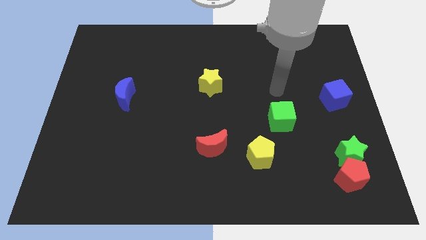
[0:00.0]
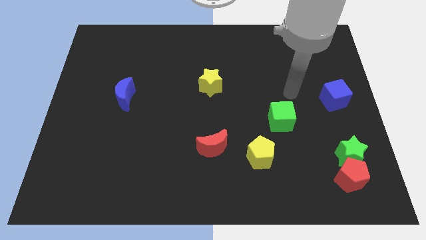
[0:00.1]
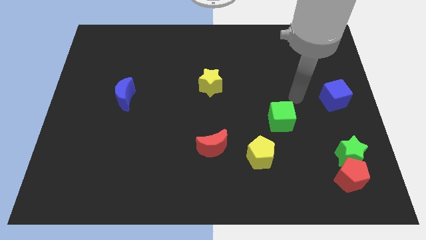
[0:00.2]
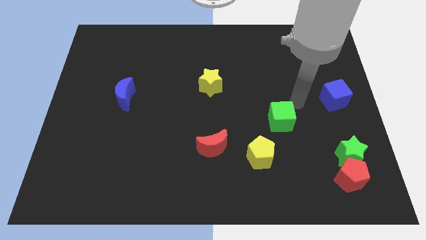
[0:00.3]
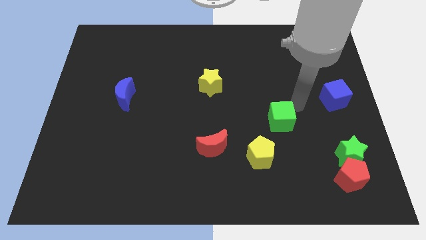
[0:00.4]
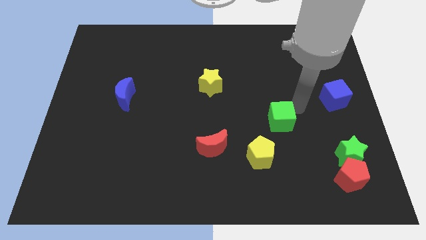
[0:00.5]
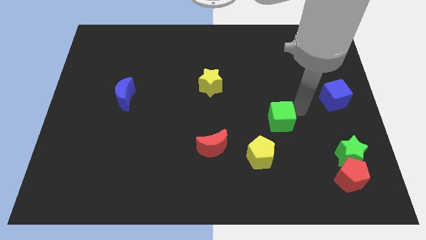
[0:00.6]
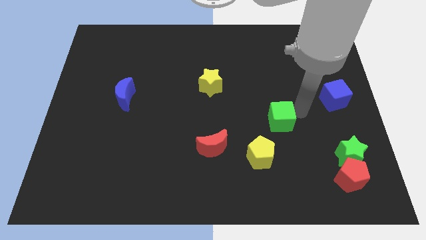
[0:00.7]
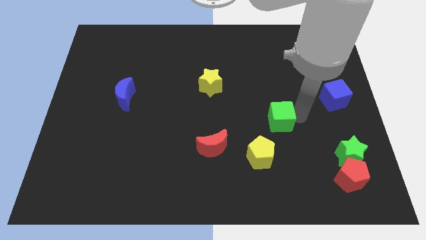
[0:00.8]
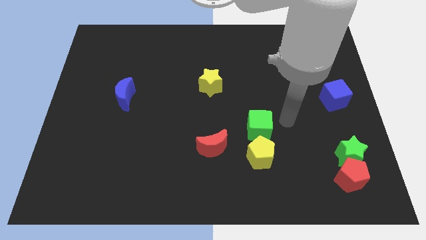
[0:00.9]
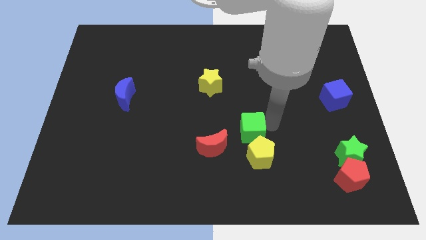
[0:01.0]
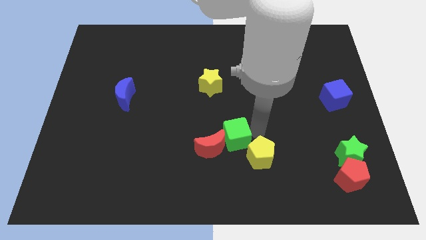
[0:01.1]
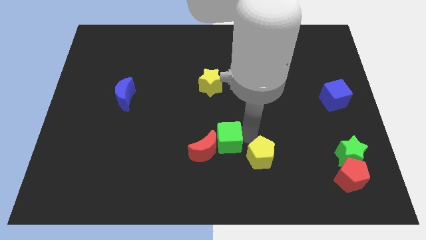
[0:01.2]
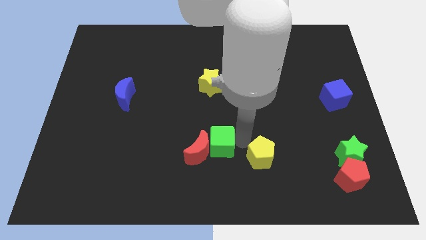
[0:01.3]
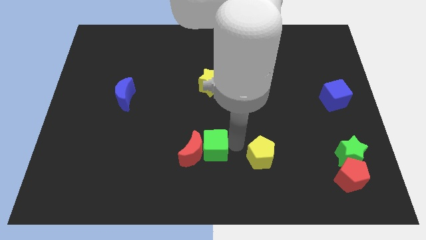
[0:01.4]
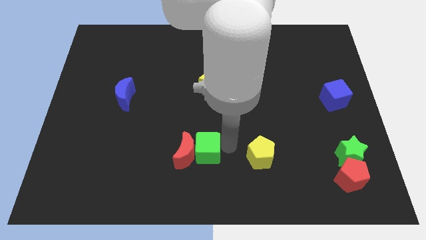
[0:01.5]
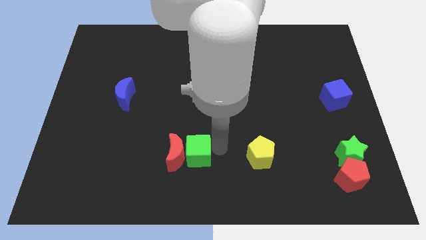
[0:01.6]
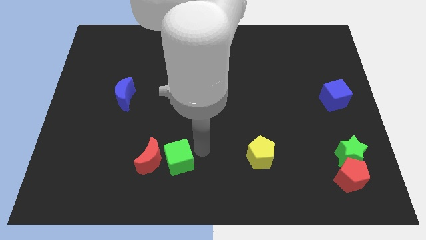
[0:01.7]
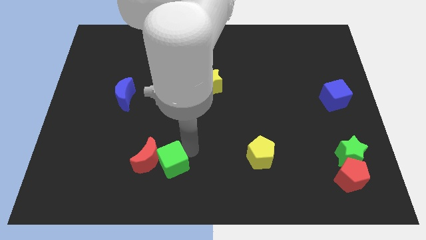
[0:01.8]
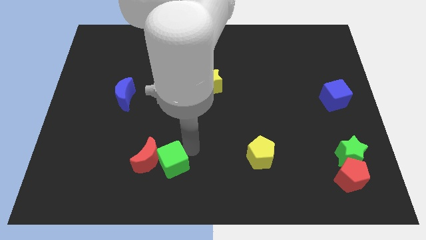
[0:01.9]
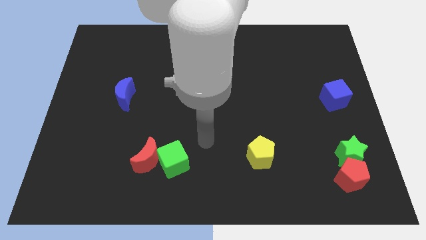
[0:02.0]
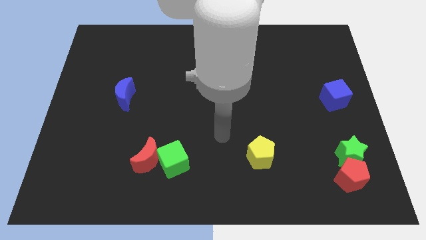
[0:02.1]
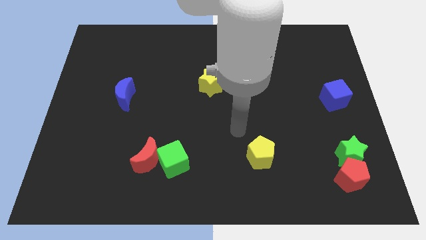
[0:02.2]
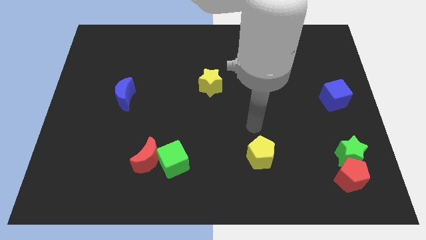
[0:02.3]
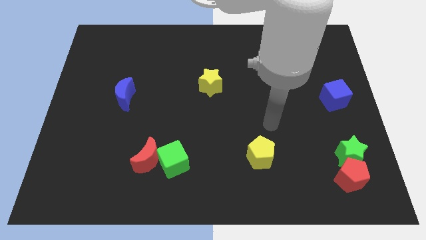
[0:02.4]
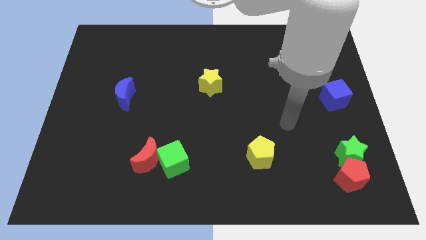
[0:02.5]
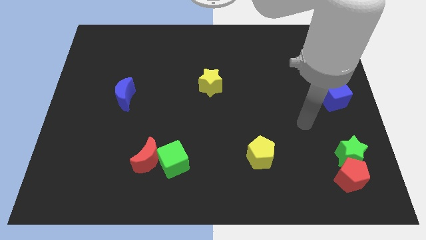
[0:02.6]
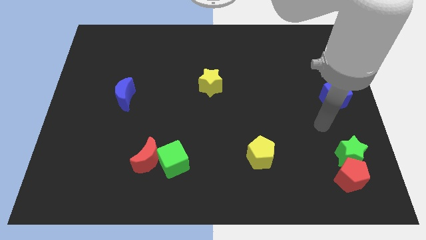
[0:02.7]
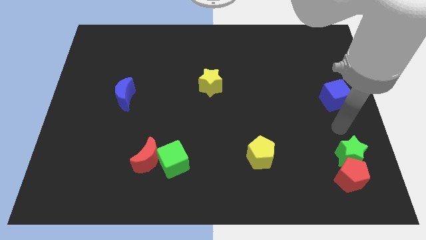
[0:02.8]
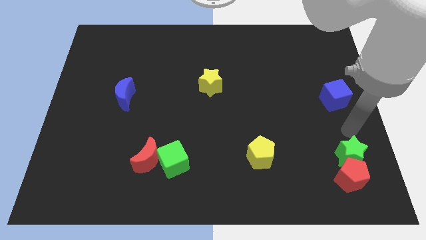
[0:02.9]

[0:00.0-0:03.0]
put the green cube and red moon together to the left side of the yellow pentagon

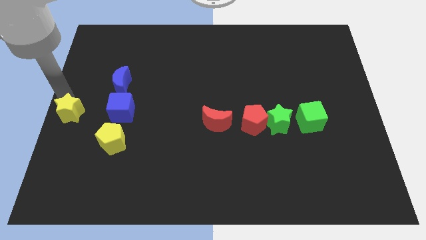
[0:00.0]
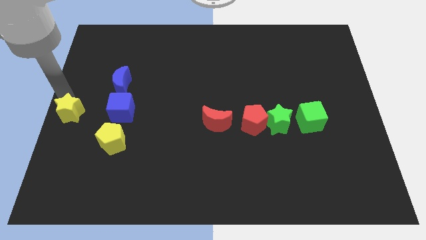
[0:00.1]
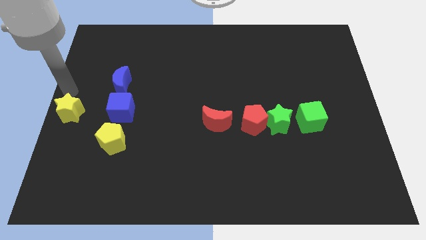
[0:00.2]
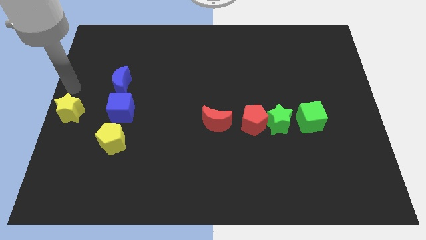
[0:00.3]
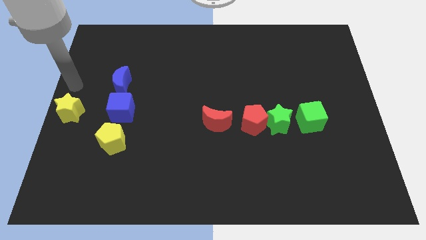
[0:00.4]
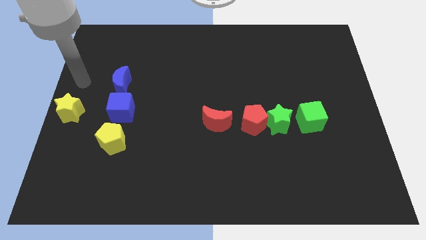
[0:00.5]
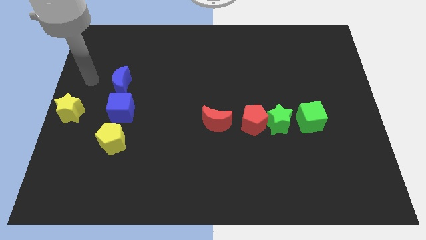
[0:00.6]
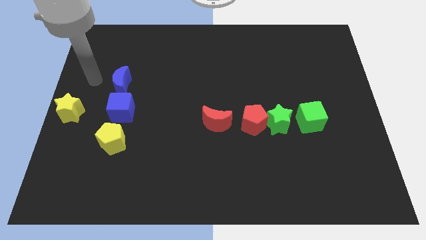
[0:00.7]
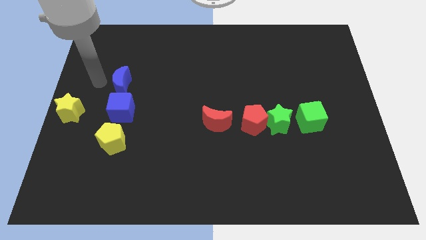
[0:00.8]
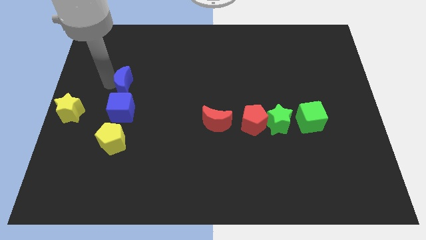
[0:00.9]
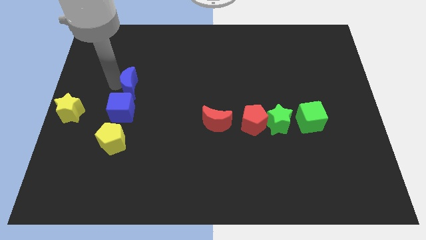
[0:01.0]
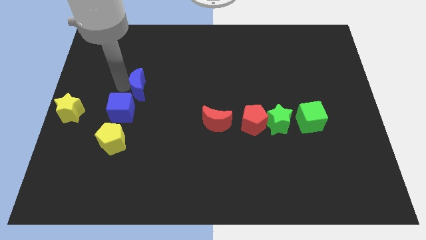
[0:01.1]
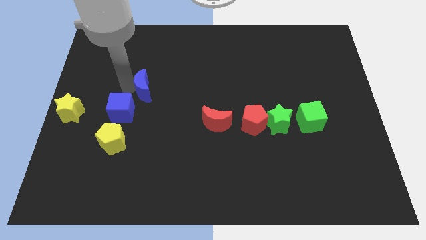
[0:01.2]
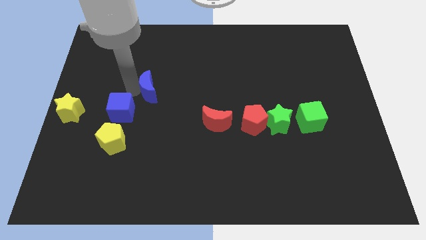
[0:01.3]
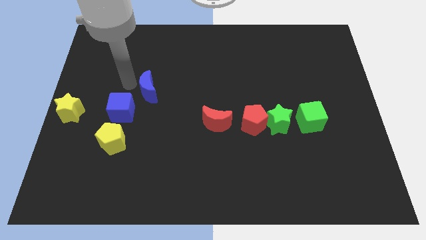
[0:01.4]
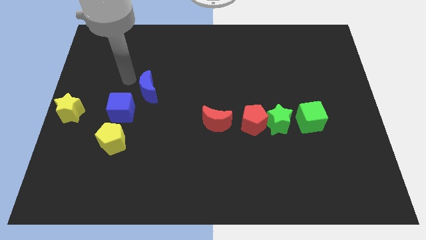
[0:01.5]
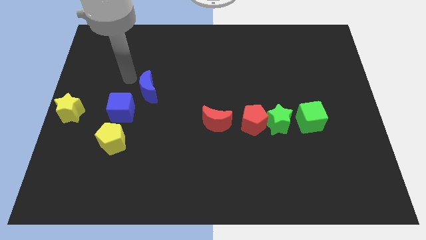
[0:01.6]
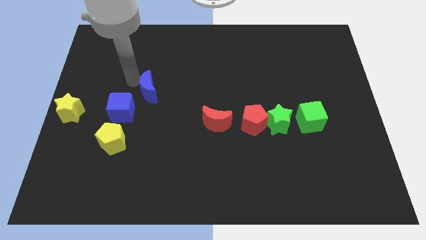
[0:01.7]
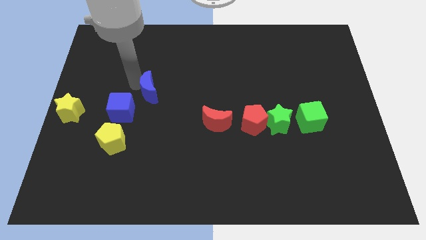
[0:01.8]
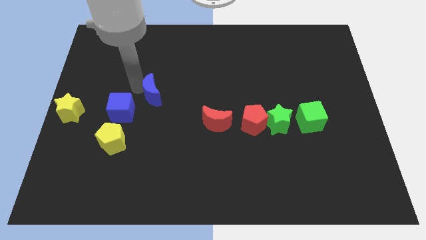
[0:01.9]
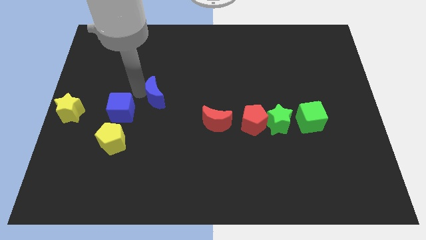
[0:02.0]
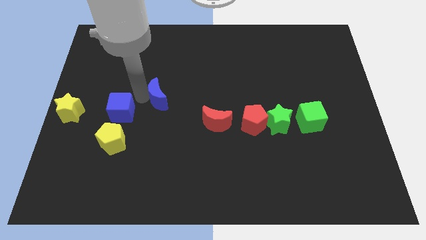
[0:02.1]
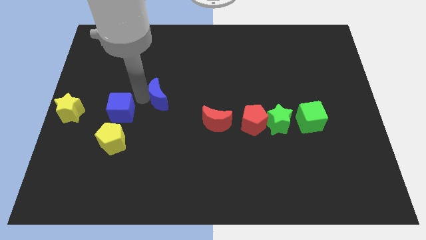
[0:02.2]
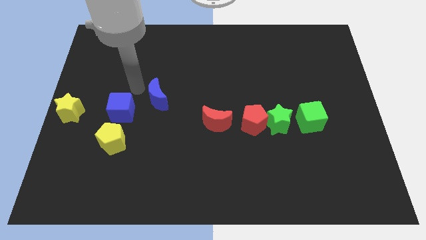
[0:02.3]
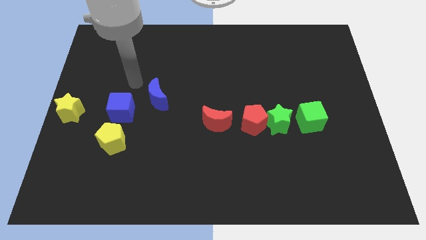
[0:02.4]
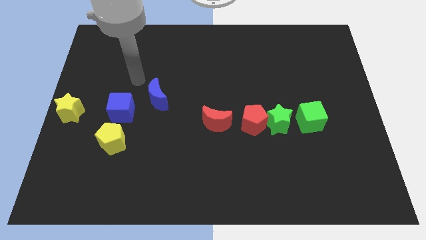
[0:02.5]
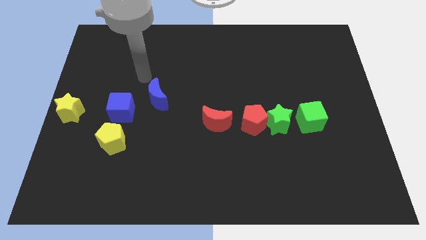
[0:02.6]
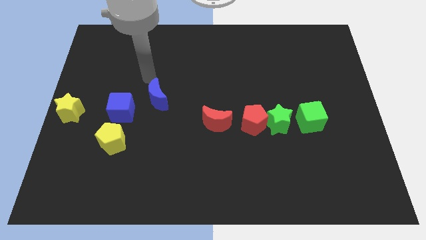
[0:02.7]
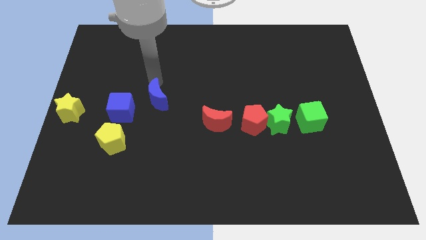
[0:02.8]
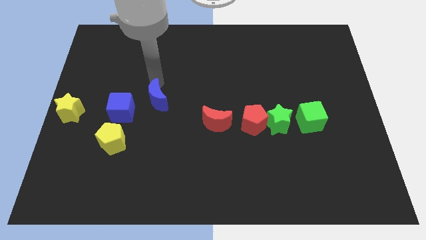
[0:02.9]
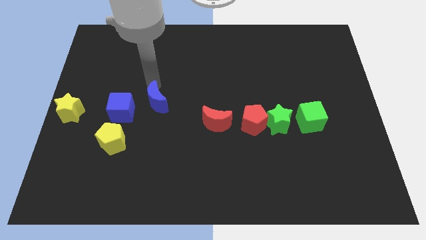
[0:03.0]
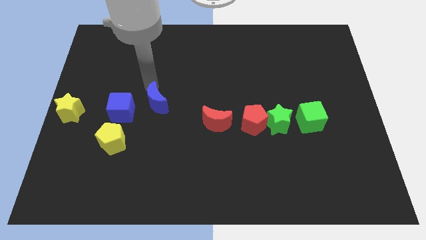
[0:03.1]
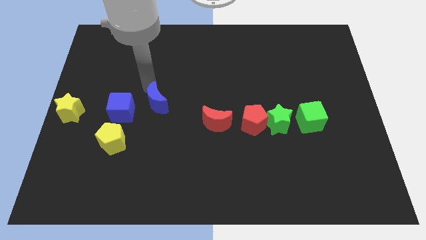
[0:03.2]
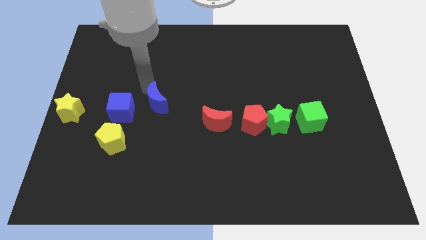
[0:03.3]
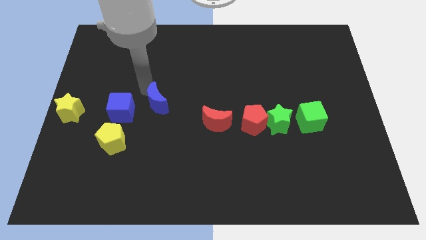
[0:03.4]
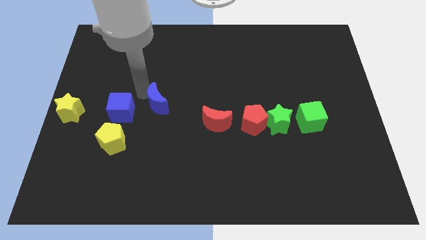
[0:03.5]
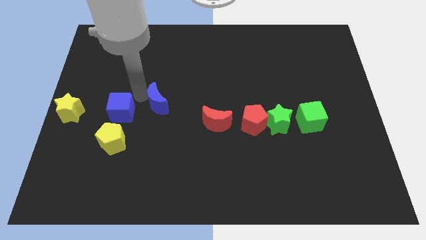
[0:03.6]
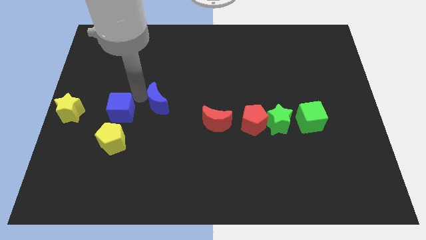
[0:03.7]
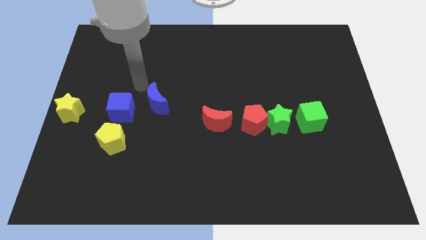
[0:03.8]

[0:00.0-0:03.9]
place blue moon to the top right of blue cube

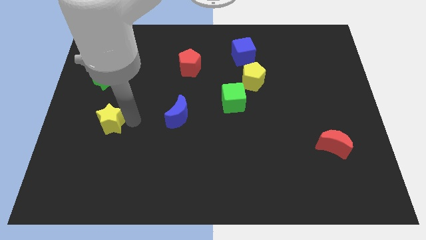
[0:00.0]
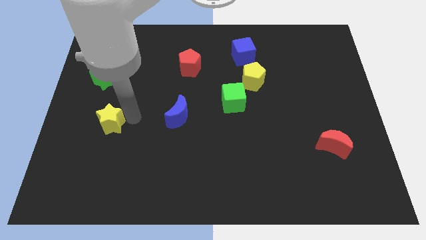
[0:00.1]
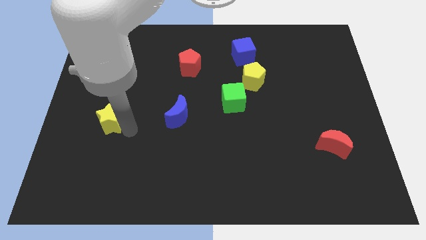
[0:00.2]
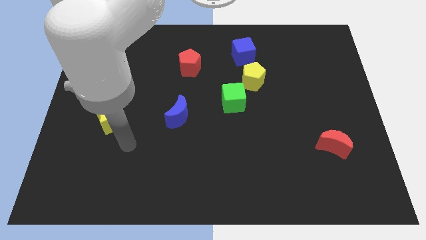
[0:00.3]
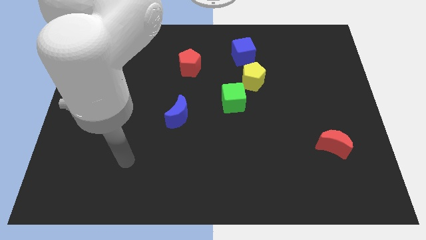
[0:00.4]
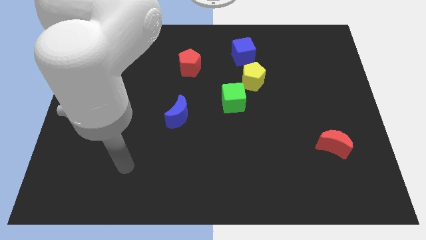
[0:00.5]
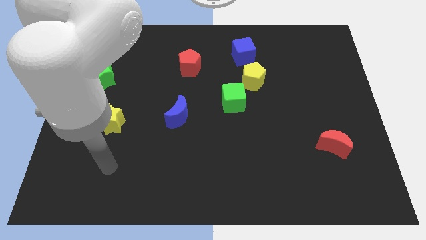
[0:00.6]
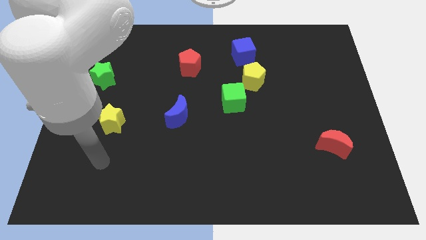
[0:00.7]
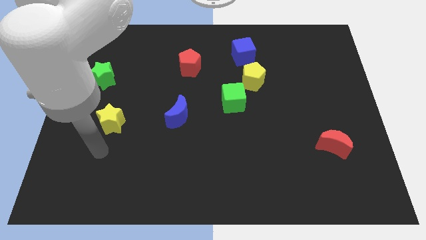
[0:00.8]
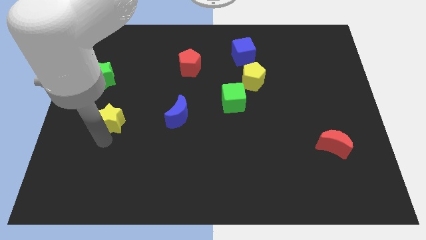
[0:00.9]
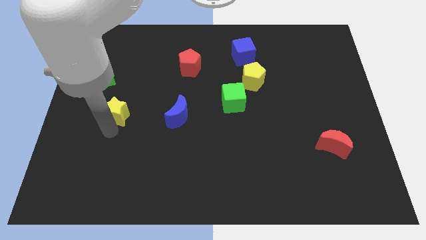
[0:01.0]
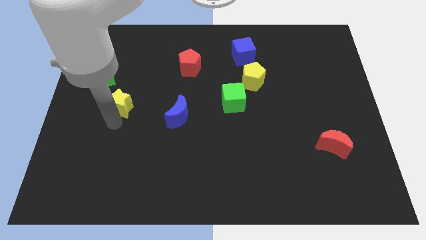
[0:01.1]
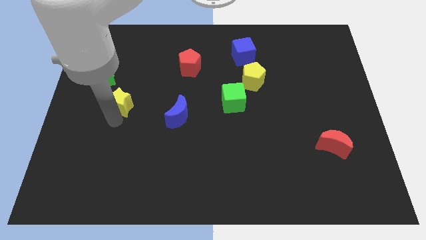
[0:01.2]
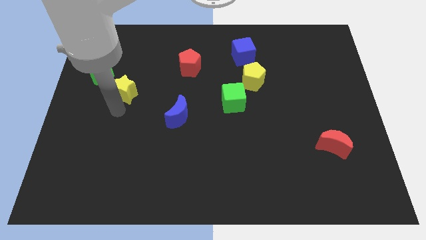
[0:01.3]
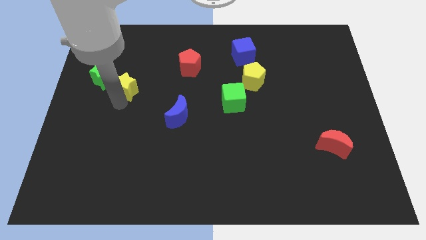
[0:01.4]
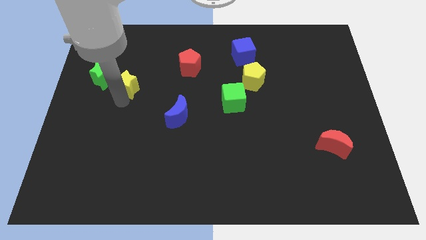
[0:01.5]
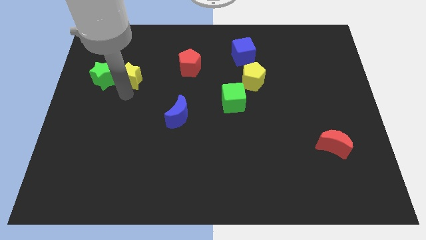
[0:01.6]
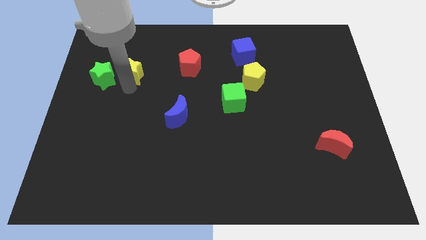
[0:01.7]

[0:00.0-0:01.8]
move the yellow star parallel right to the green star

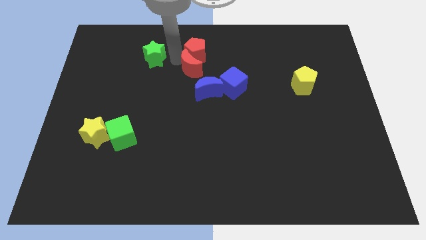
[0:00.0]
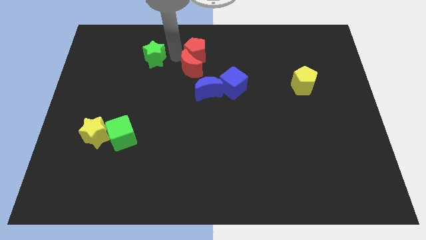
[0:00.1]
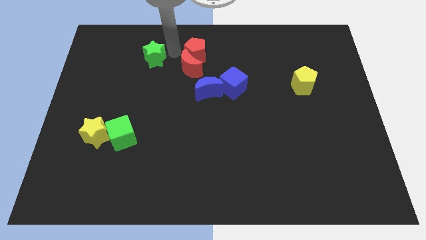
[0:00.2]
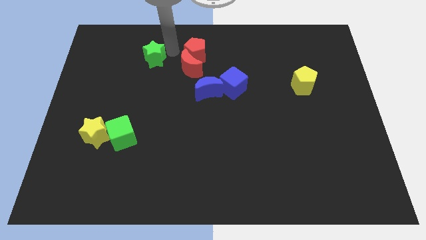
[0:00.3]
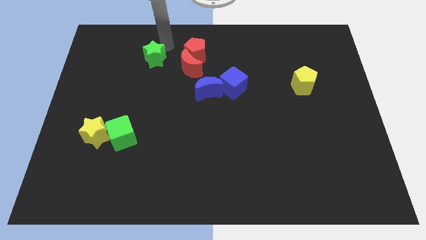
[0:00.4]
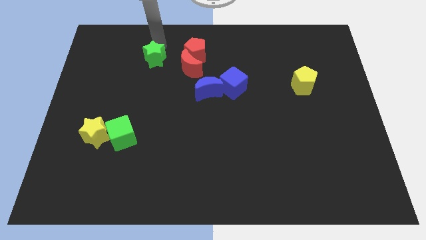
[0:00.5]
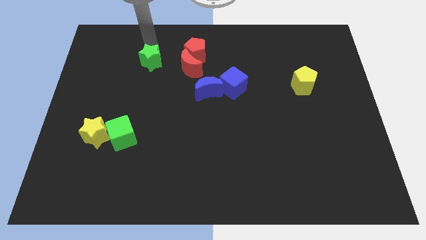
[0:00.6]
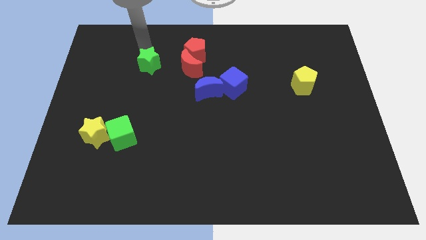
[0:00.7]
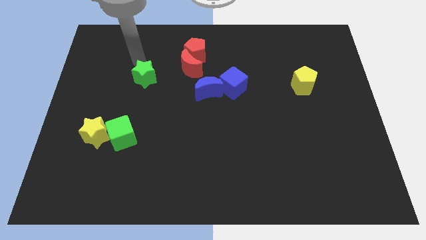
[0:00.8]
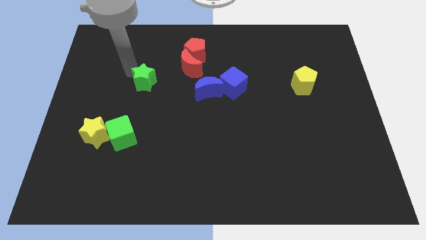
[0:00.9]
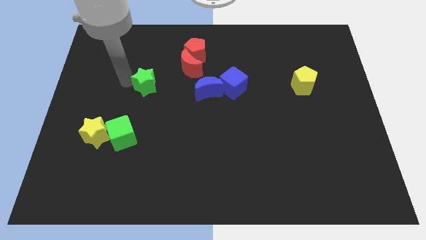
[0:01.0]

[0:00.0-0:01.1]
slightly move the green star down
